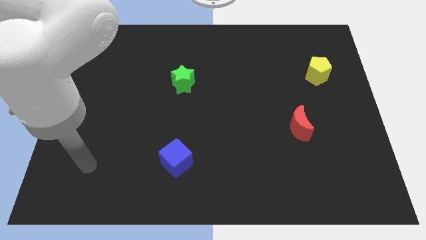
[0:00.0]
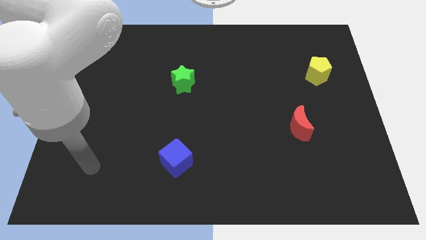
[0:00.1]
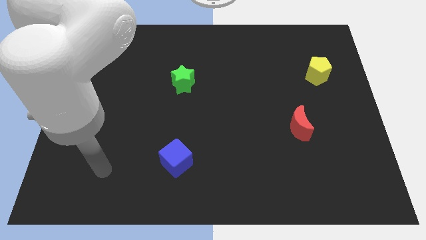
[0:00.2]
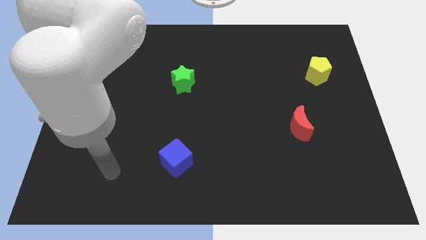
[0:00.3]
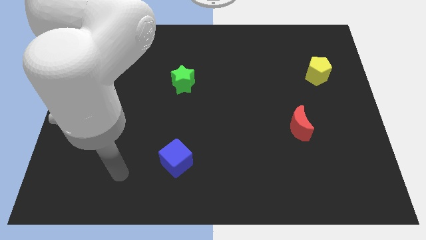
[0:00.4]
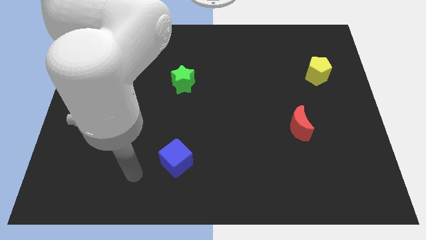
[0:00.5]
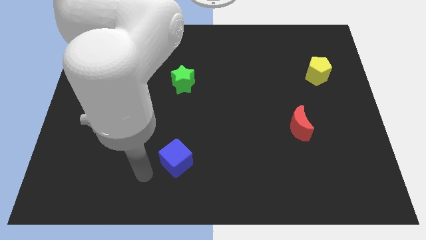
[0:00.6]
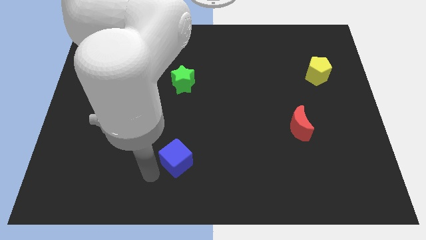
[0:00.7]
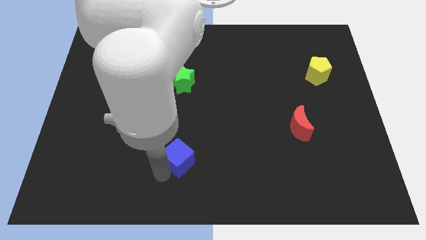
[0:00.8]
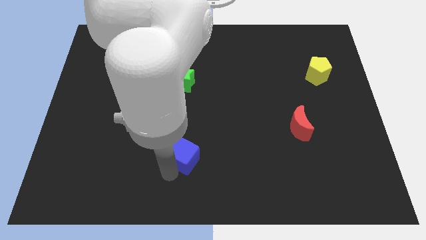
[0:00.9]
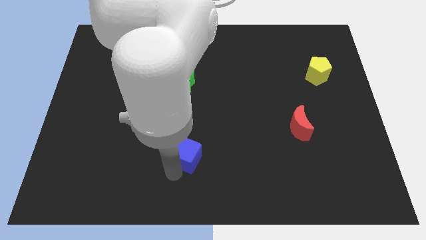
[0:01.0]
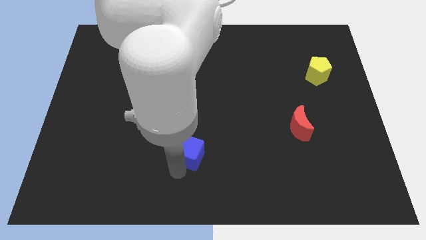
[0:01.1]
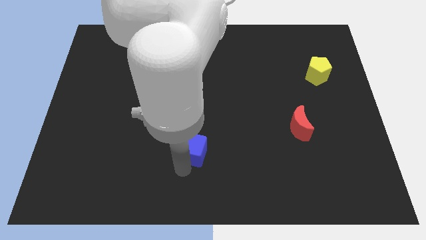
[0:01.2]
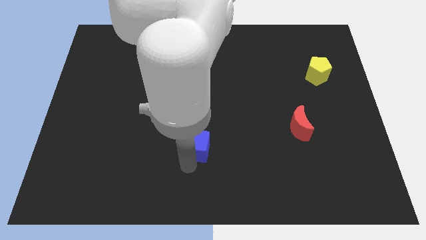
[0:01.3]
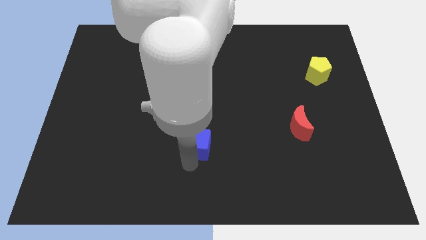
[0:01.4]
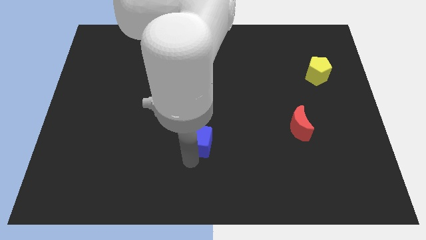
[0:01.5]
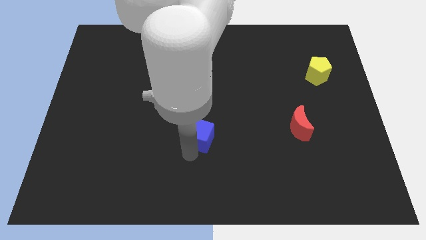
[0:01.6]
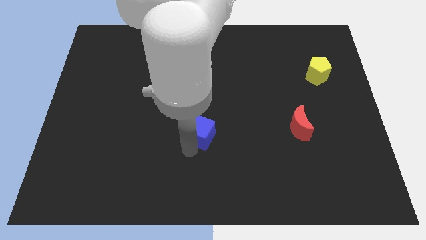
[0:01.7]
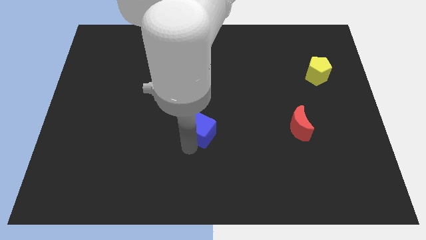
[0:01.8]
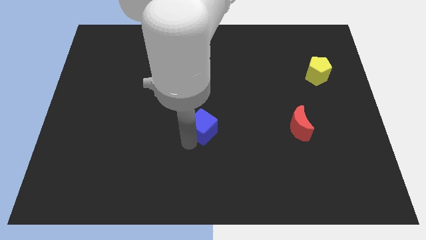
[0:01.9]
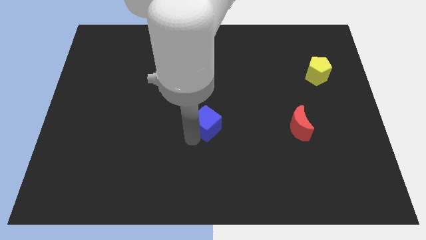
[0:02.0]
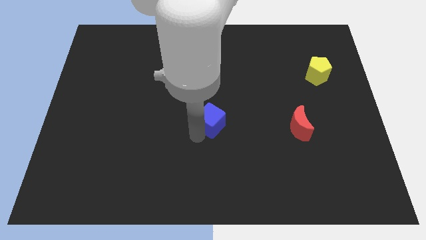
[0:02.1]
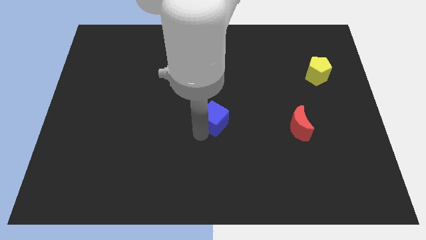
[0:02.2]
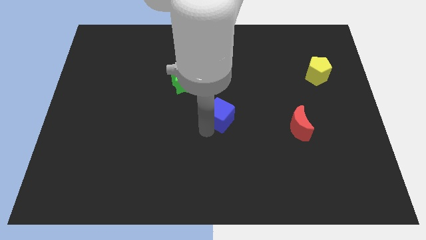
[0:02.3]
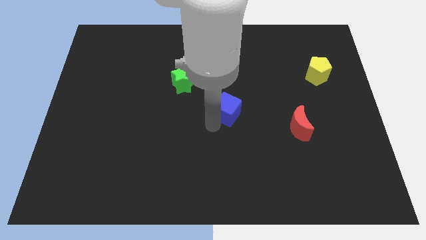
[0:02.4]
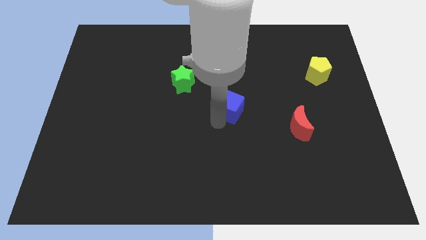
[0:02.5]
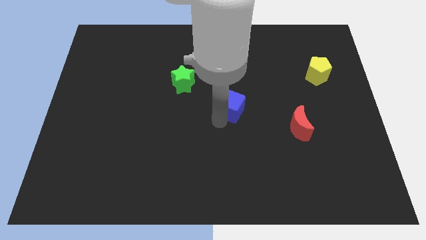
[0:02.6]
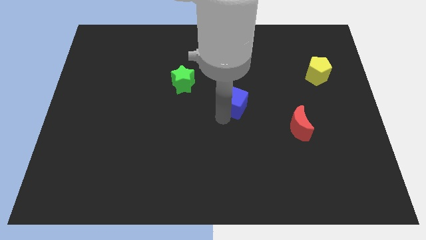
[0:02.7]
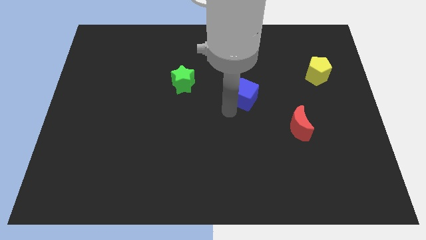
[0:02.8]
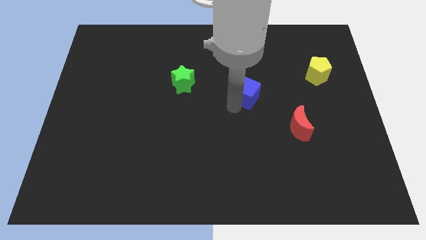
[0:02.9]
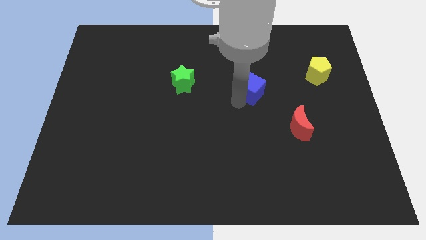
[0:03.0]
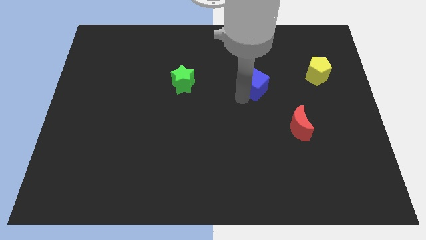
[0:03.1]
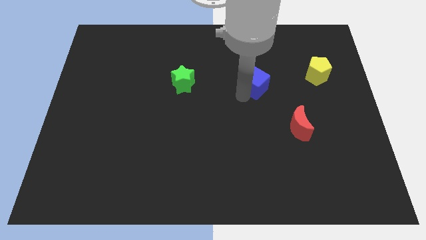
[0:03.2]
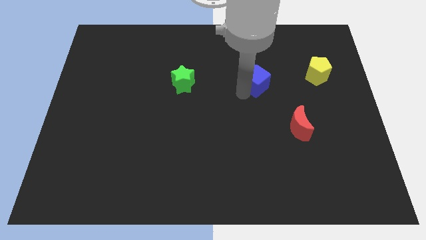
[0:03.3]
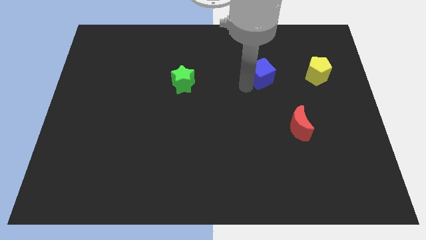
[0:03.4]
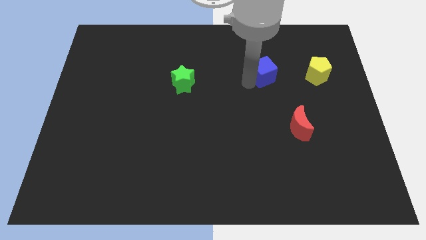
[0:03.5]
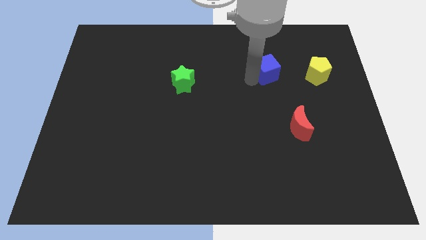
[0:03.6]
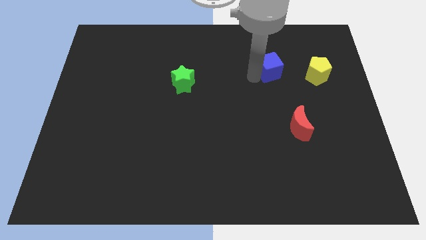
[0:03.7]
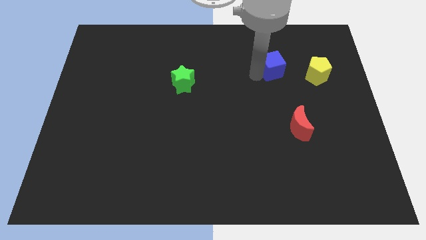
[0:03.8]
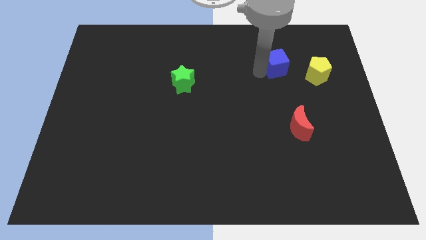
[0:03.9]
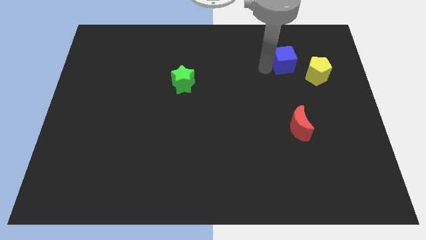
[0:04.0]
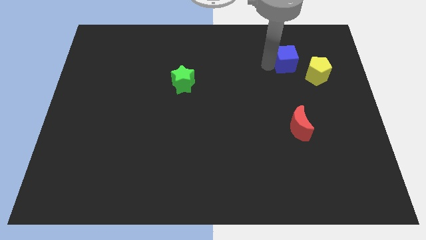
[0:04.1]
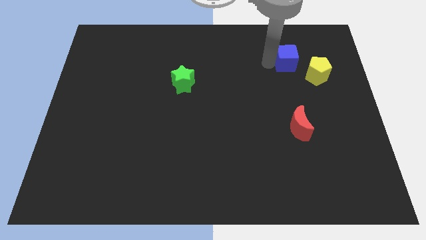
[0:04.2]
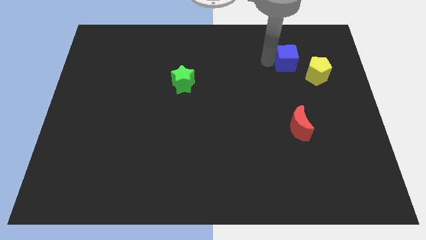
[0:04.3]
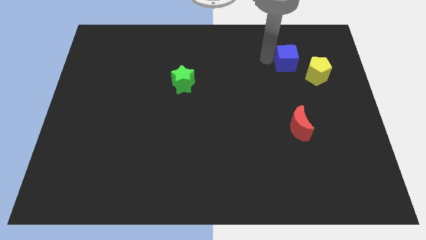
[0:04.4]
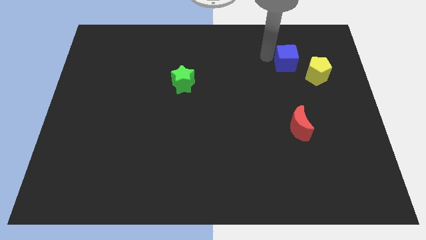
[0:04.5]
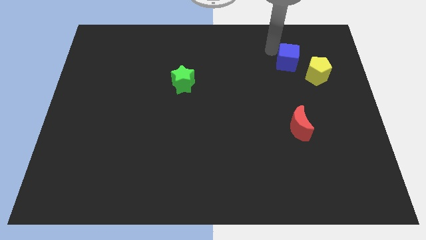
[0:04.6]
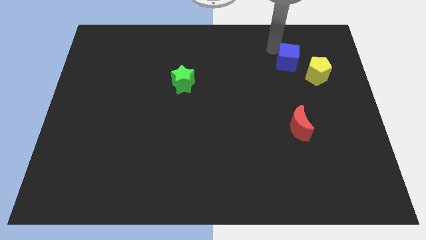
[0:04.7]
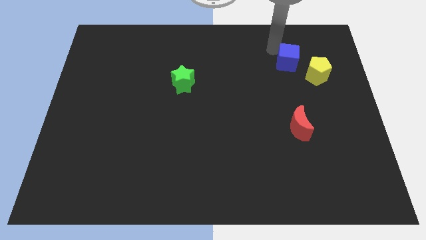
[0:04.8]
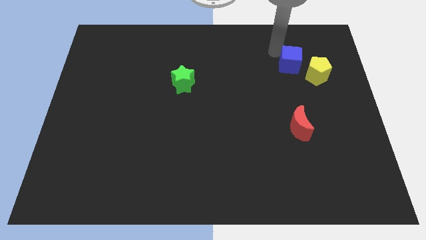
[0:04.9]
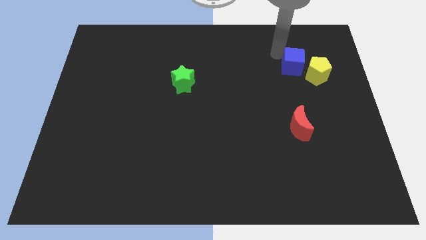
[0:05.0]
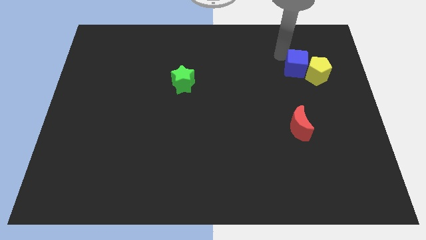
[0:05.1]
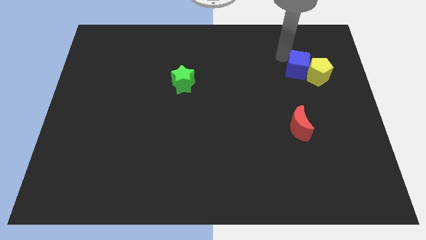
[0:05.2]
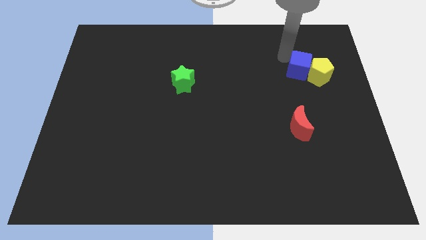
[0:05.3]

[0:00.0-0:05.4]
slide the blue block next to the yellow pentagon

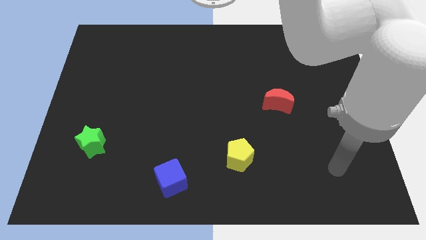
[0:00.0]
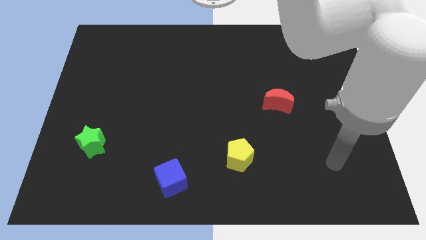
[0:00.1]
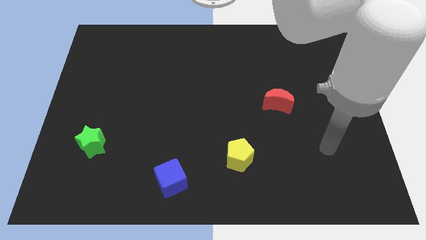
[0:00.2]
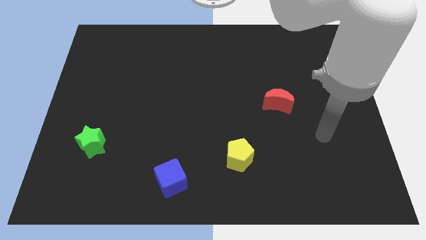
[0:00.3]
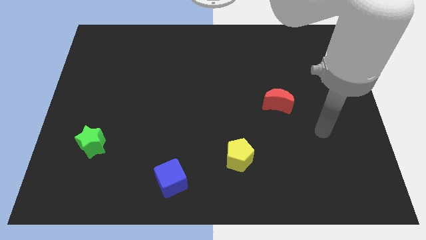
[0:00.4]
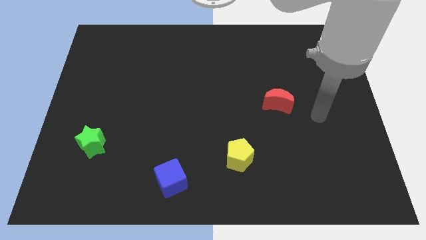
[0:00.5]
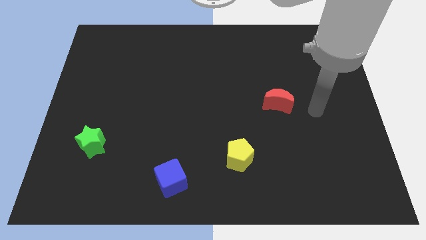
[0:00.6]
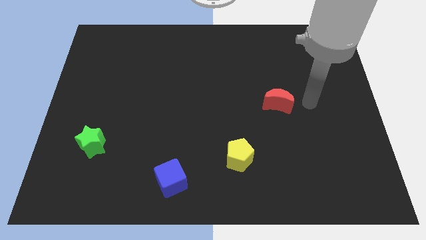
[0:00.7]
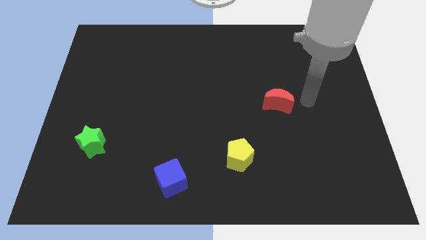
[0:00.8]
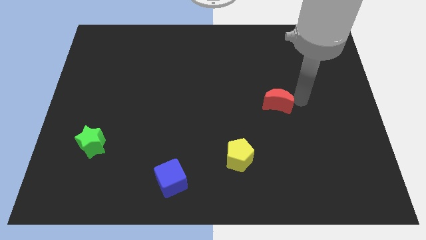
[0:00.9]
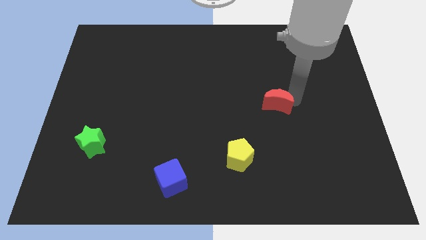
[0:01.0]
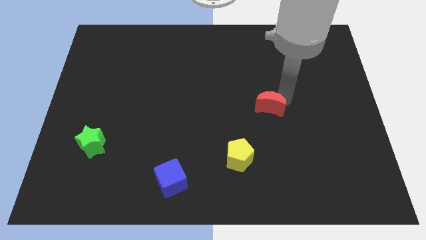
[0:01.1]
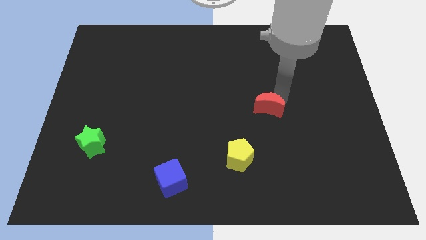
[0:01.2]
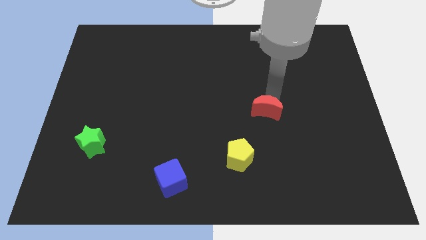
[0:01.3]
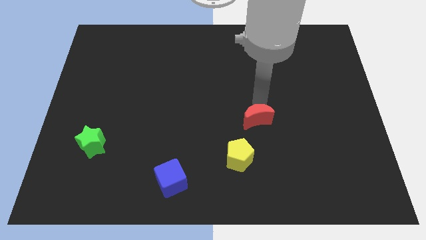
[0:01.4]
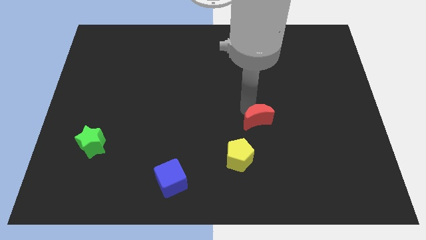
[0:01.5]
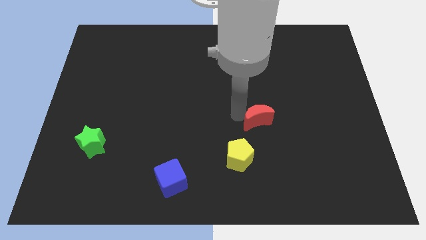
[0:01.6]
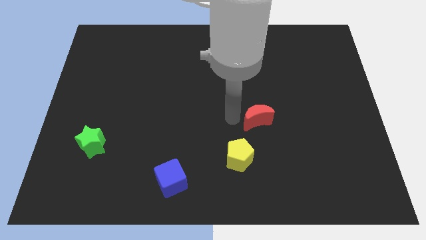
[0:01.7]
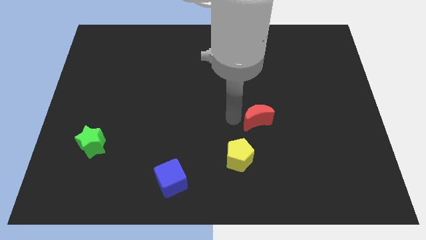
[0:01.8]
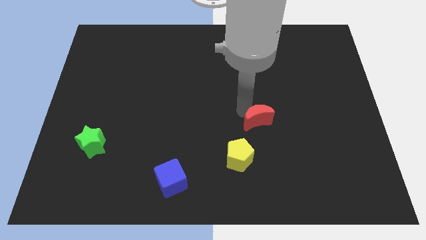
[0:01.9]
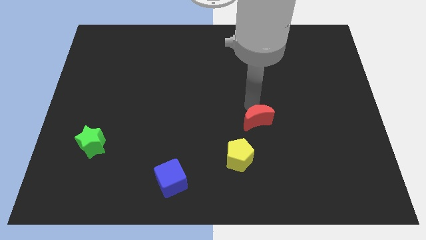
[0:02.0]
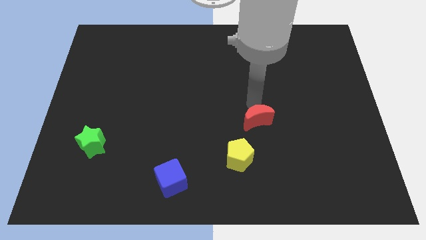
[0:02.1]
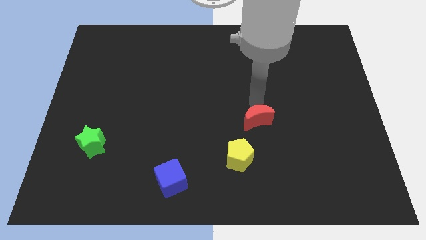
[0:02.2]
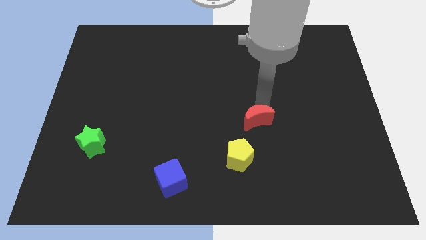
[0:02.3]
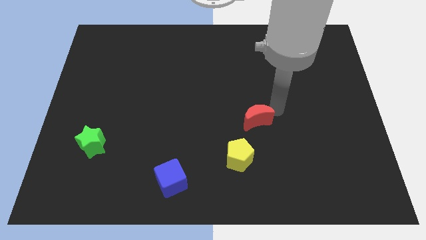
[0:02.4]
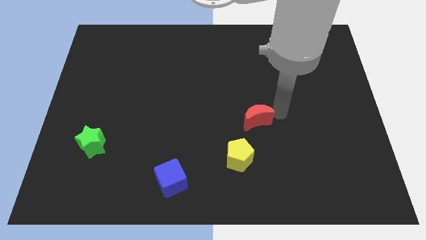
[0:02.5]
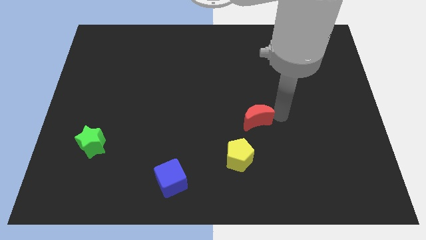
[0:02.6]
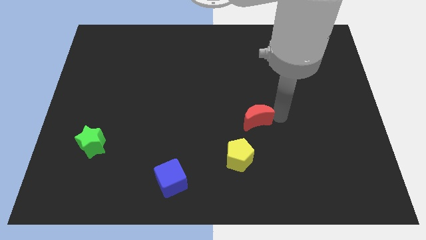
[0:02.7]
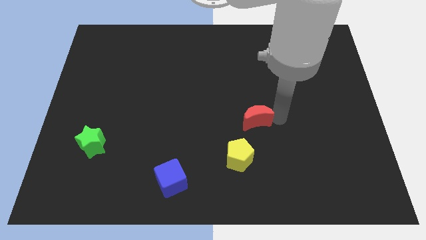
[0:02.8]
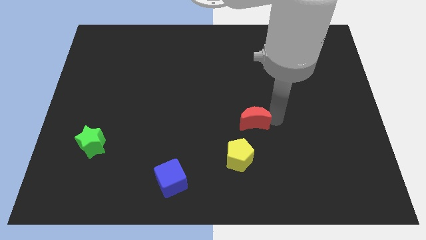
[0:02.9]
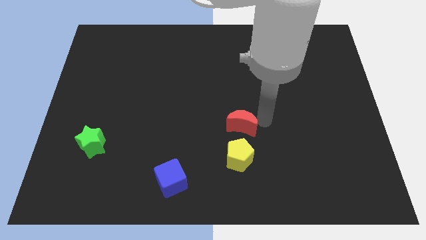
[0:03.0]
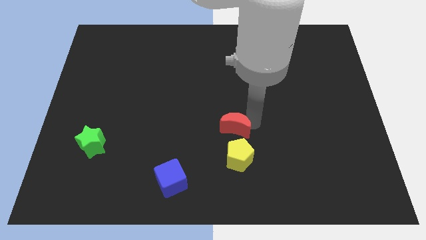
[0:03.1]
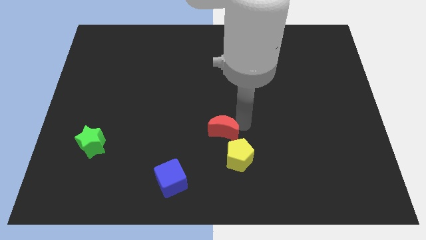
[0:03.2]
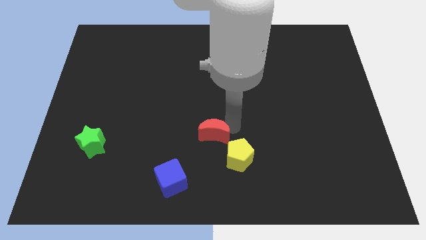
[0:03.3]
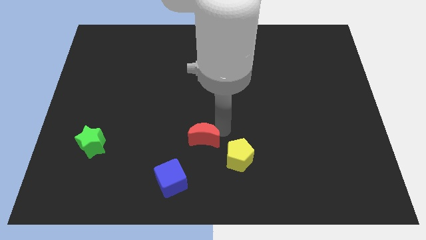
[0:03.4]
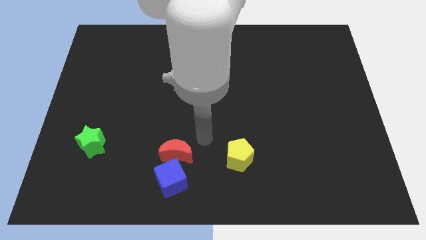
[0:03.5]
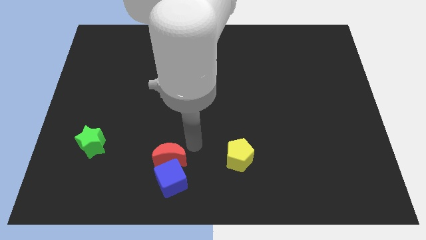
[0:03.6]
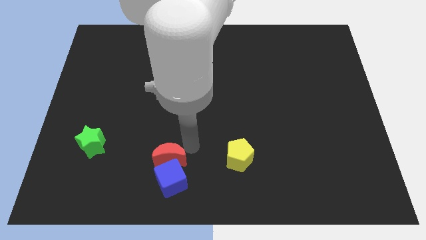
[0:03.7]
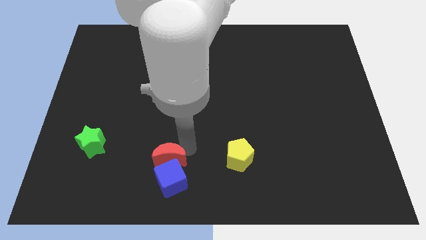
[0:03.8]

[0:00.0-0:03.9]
slide the moon towards the cube
